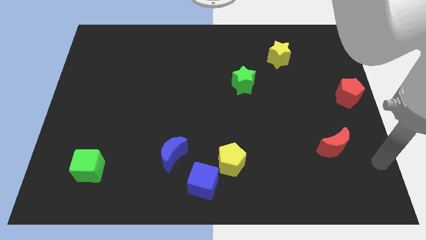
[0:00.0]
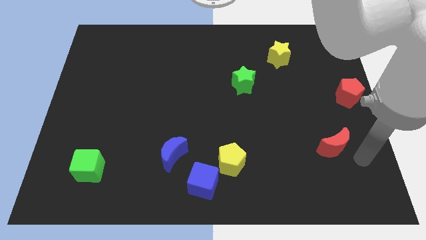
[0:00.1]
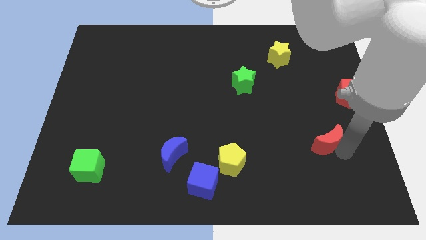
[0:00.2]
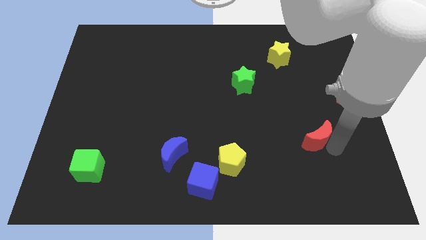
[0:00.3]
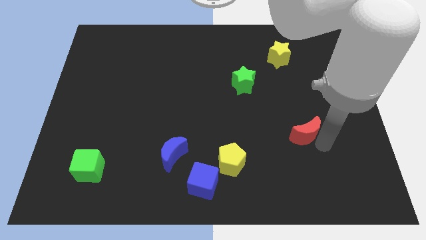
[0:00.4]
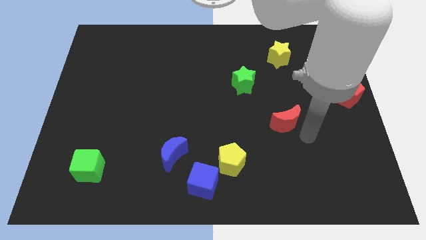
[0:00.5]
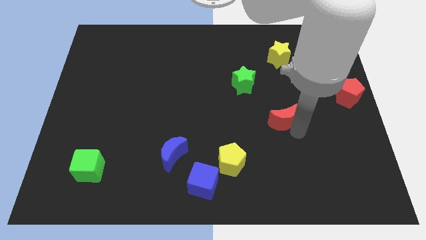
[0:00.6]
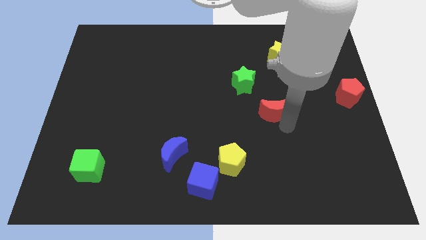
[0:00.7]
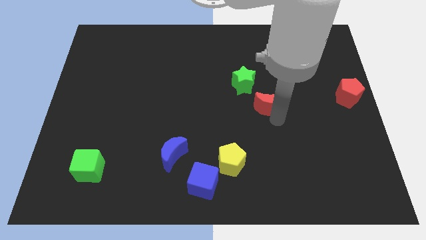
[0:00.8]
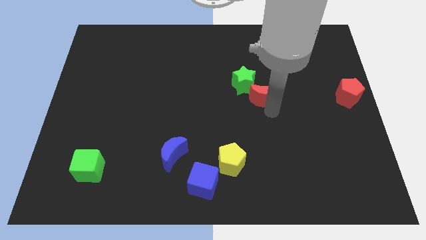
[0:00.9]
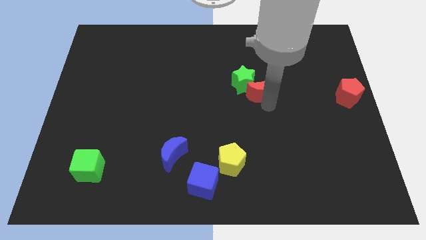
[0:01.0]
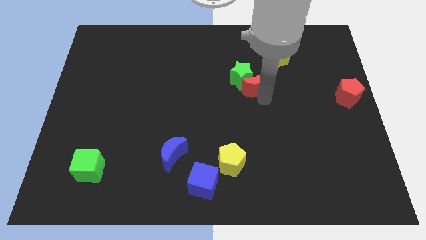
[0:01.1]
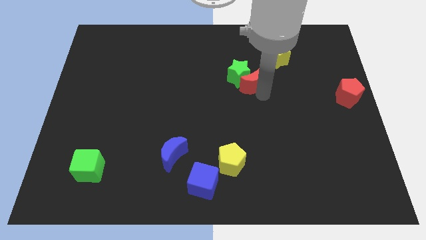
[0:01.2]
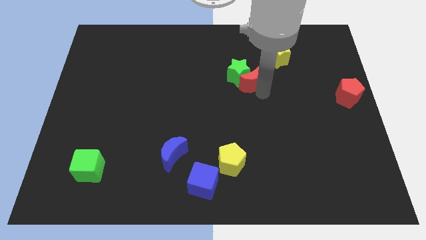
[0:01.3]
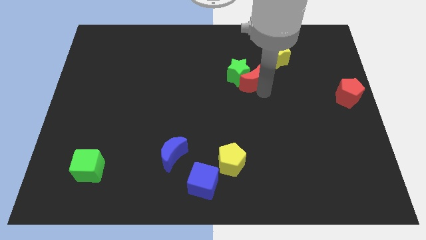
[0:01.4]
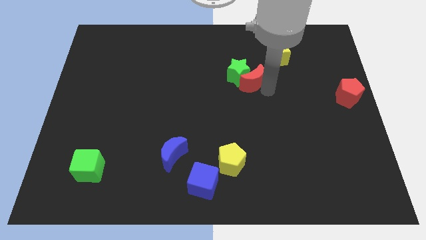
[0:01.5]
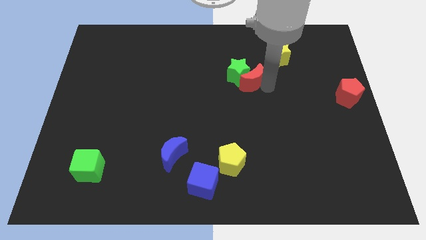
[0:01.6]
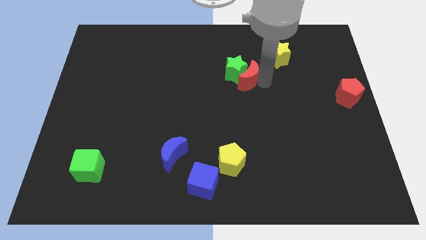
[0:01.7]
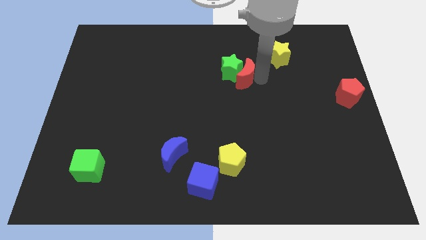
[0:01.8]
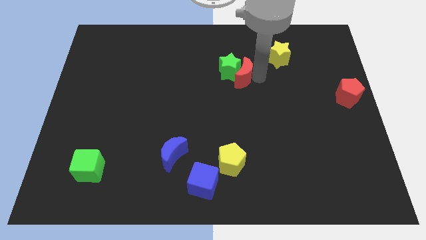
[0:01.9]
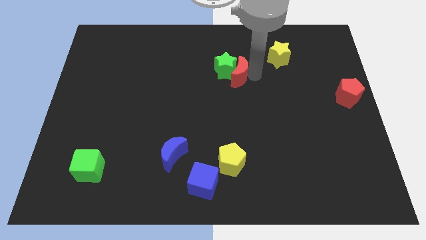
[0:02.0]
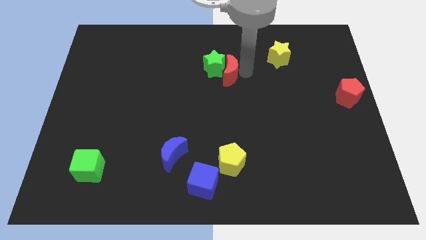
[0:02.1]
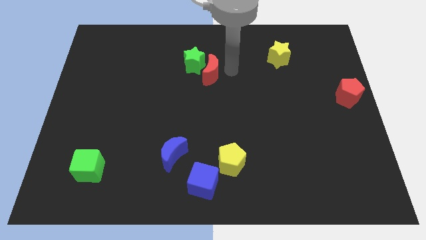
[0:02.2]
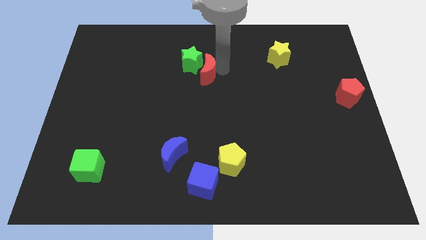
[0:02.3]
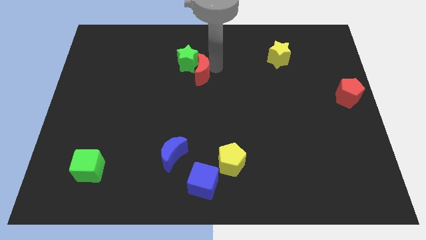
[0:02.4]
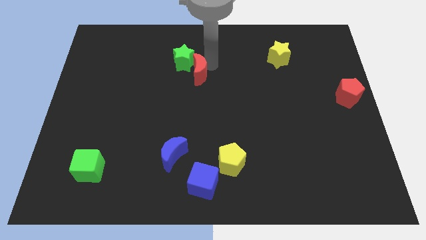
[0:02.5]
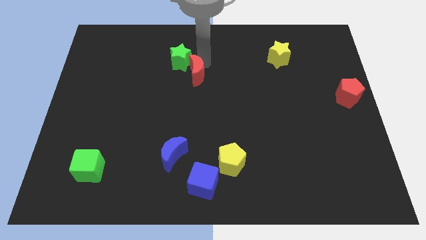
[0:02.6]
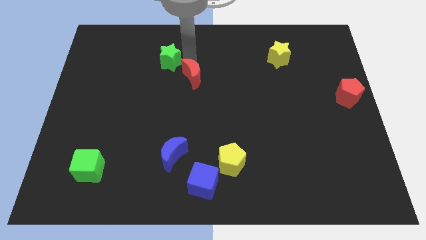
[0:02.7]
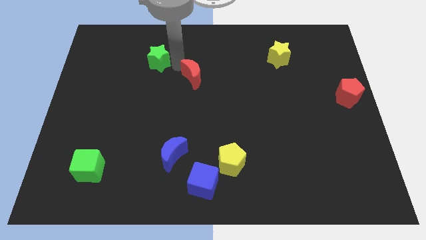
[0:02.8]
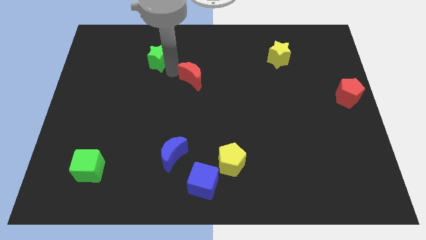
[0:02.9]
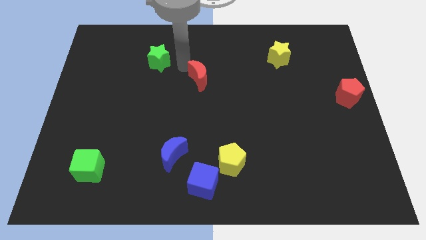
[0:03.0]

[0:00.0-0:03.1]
push the red moon into the green star

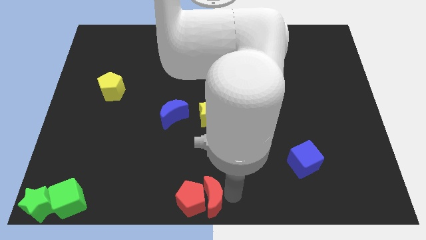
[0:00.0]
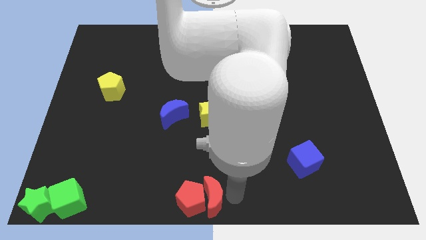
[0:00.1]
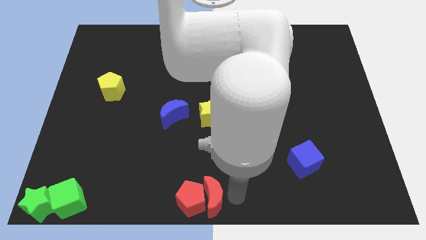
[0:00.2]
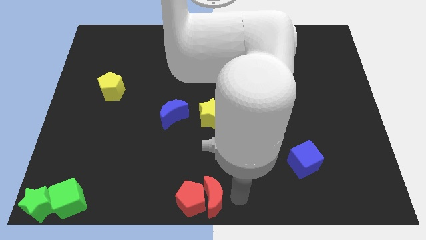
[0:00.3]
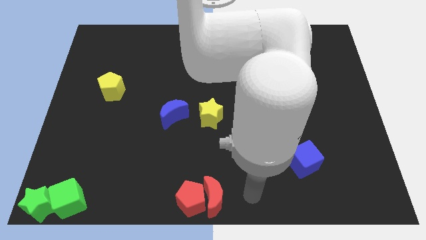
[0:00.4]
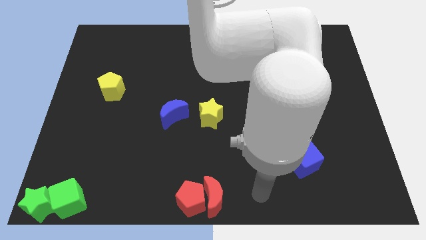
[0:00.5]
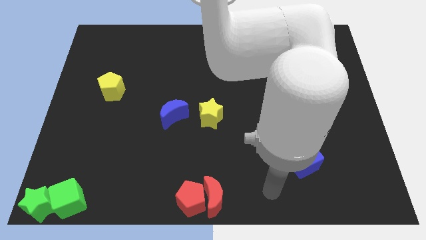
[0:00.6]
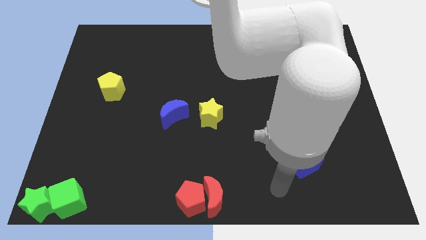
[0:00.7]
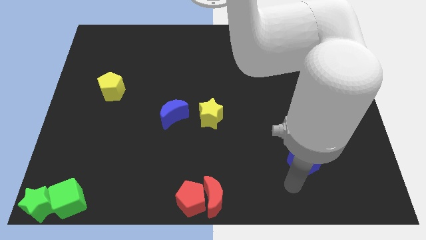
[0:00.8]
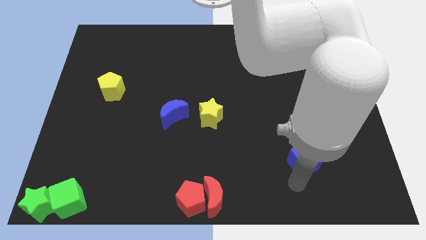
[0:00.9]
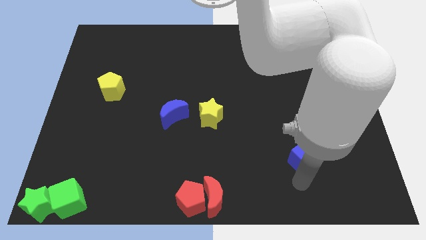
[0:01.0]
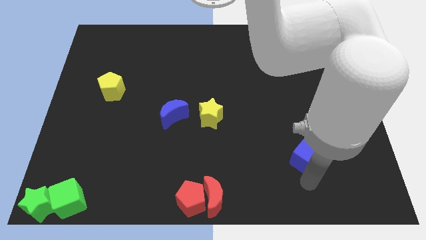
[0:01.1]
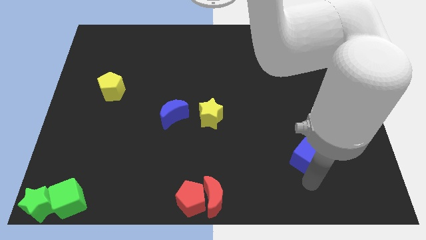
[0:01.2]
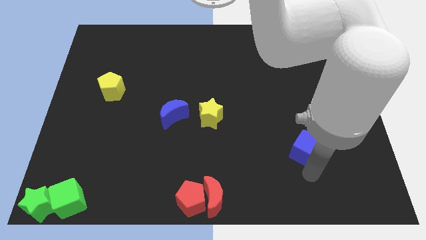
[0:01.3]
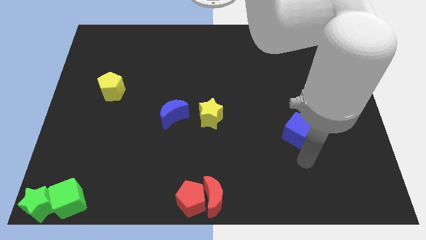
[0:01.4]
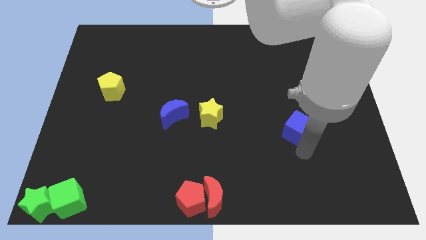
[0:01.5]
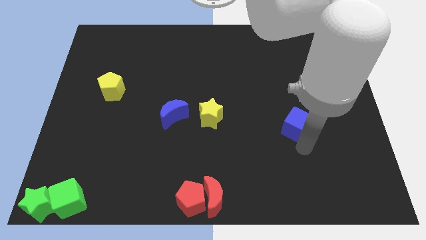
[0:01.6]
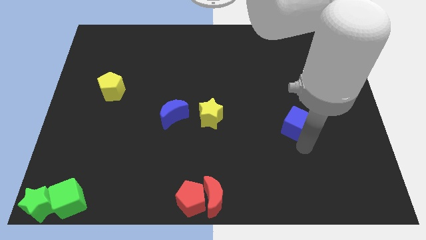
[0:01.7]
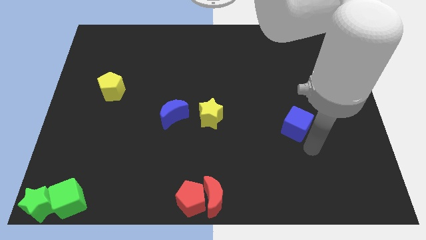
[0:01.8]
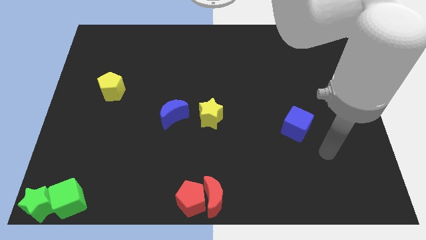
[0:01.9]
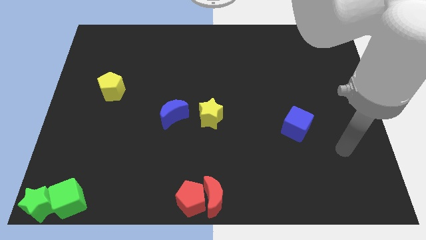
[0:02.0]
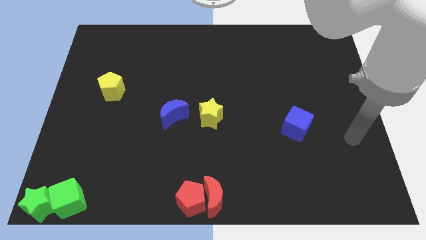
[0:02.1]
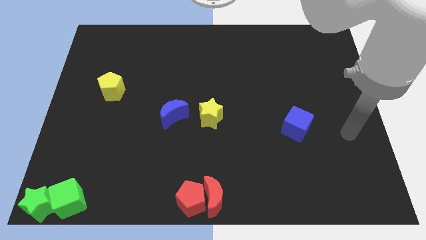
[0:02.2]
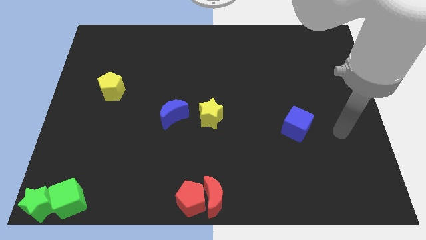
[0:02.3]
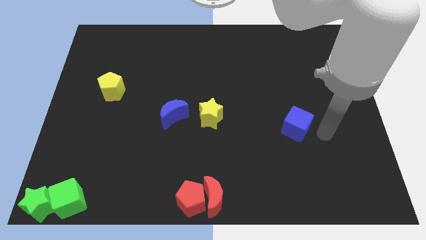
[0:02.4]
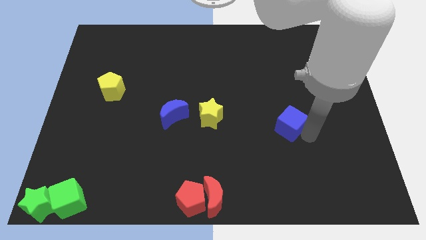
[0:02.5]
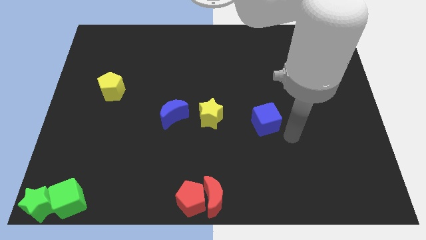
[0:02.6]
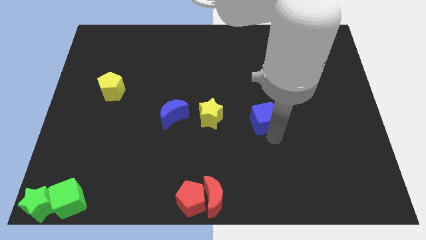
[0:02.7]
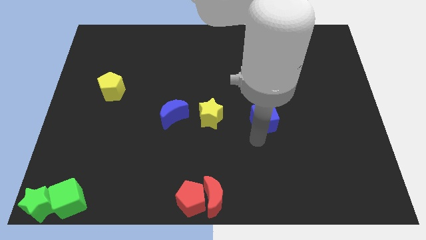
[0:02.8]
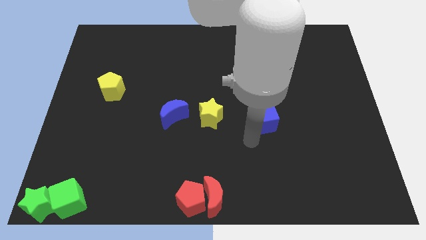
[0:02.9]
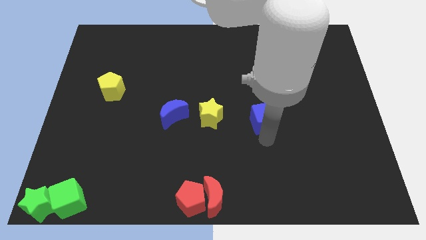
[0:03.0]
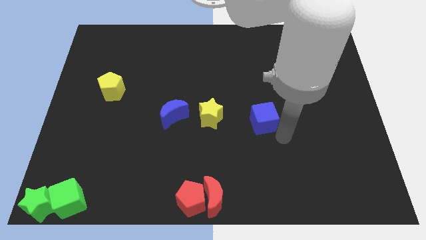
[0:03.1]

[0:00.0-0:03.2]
move the blue cube to the right side of the yellow star

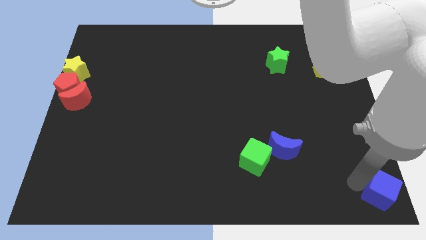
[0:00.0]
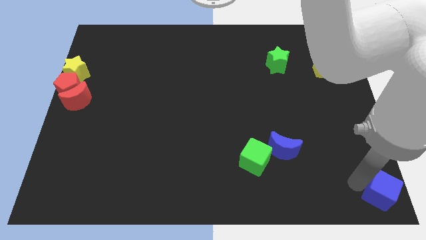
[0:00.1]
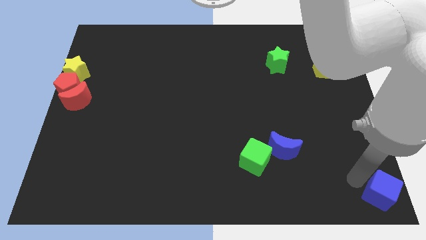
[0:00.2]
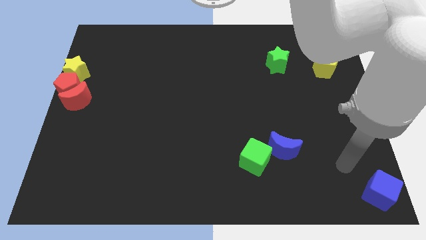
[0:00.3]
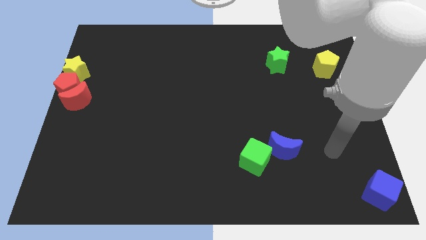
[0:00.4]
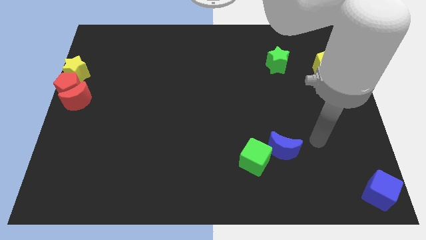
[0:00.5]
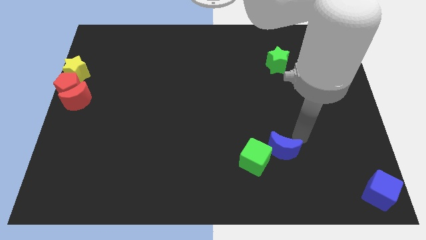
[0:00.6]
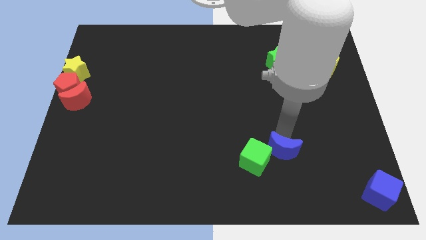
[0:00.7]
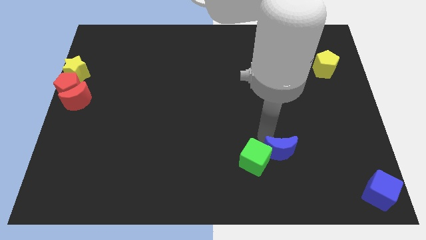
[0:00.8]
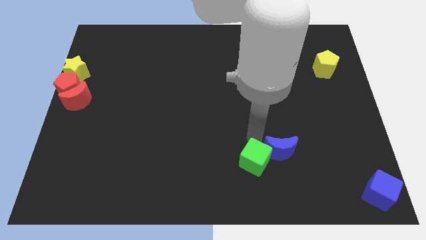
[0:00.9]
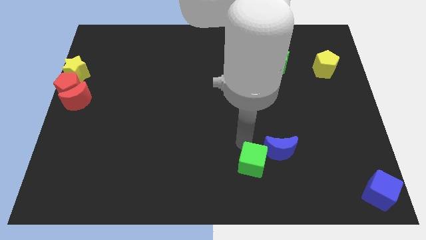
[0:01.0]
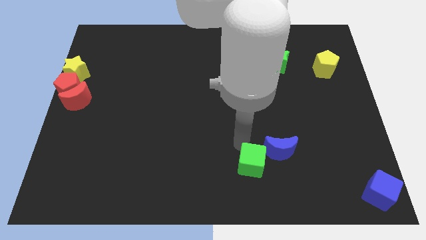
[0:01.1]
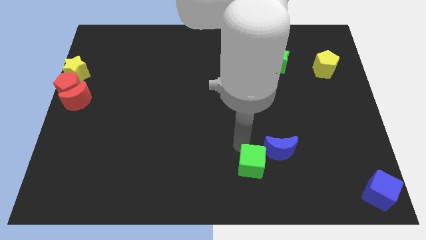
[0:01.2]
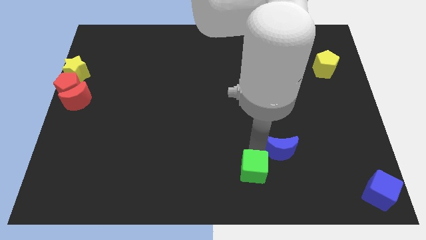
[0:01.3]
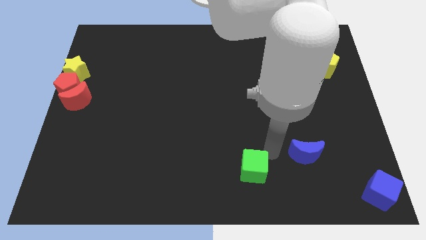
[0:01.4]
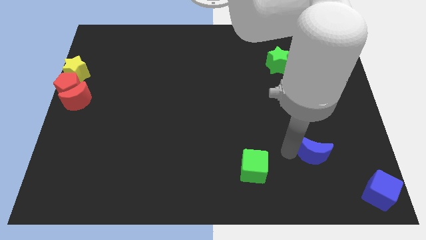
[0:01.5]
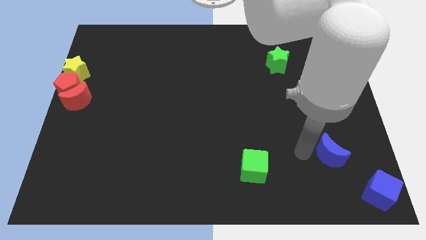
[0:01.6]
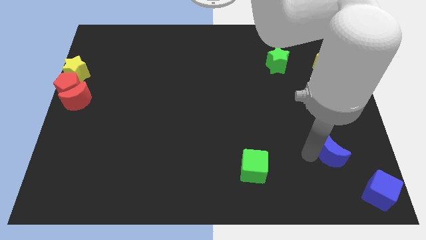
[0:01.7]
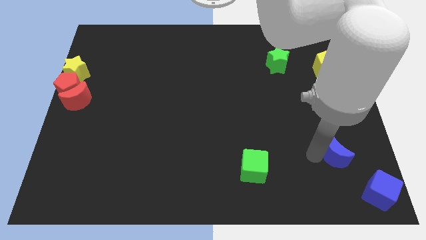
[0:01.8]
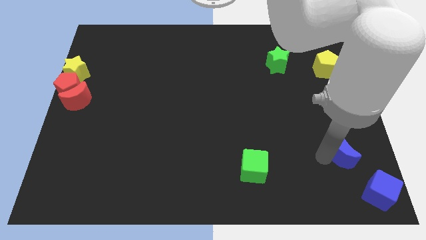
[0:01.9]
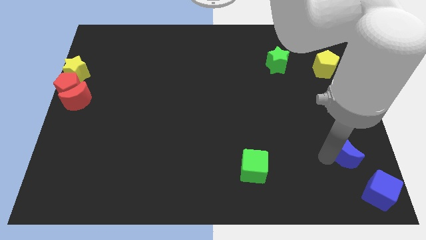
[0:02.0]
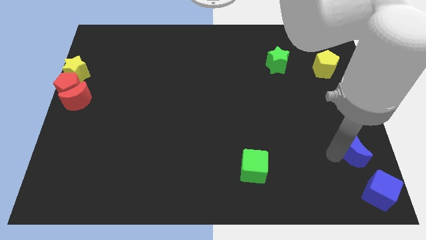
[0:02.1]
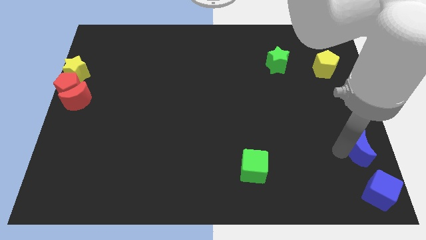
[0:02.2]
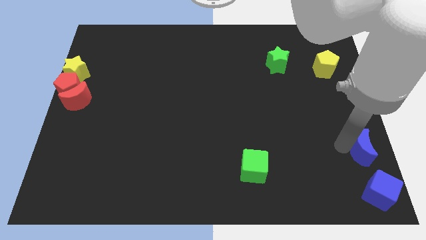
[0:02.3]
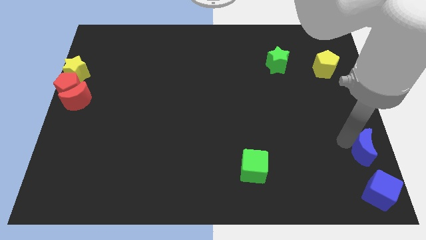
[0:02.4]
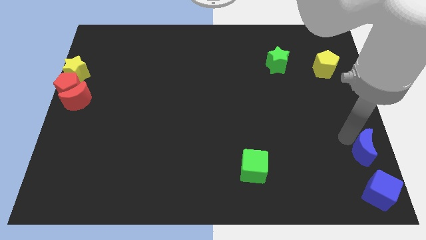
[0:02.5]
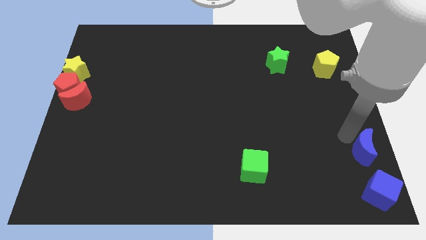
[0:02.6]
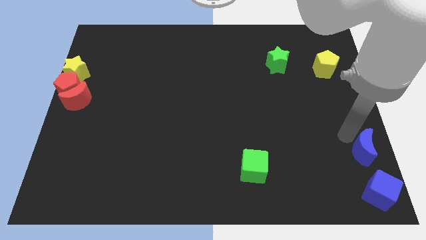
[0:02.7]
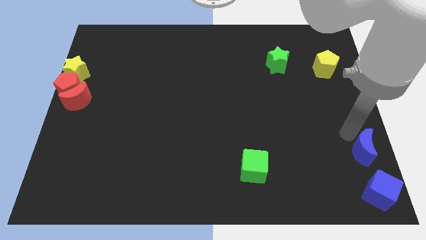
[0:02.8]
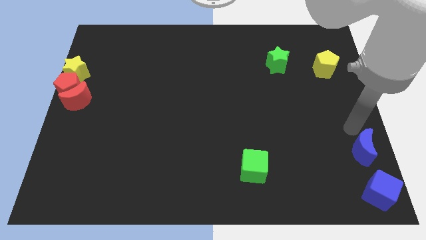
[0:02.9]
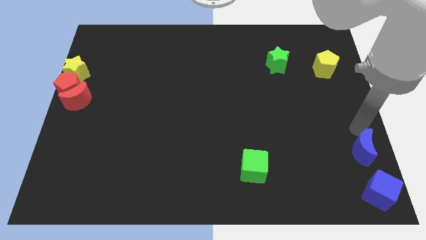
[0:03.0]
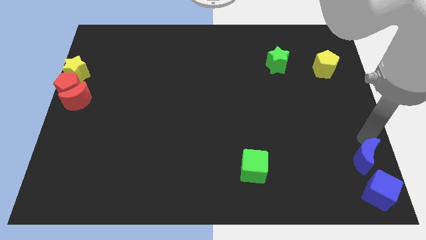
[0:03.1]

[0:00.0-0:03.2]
place the blue crescent on the top of the blue cube
